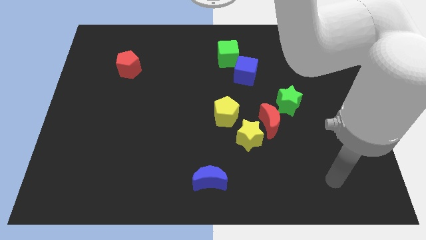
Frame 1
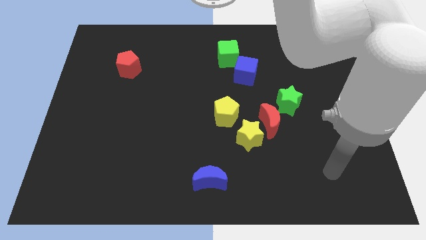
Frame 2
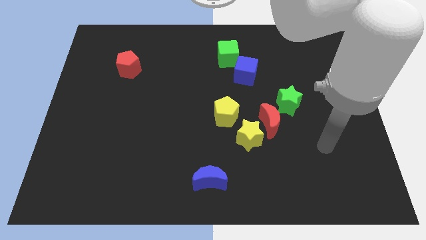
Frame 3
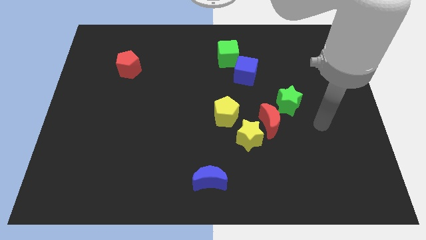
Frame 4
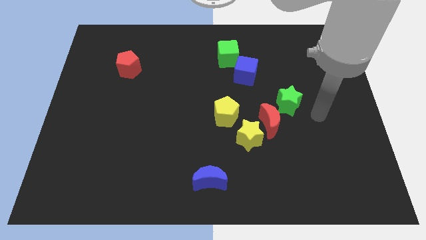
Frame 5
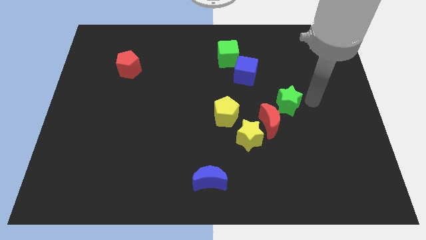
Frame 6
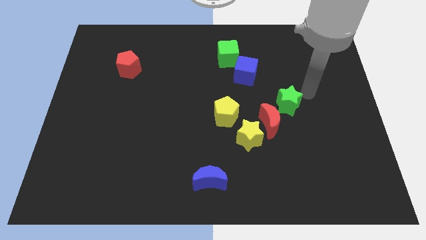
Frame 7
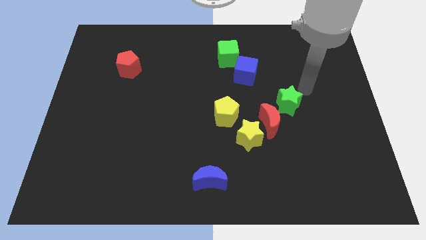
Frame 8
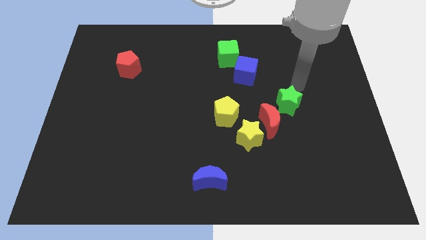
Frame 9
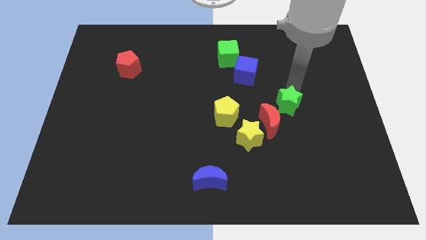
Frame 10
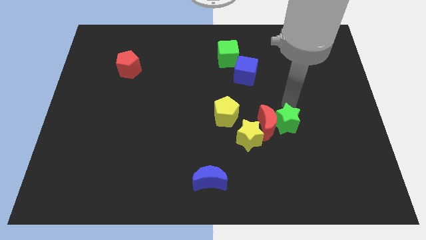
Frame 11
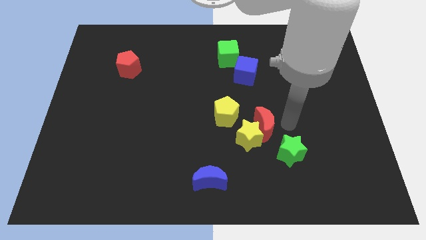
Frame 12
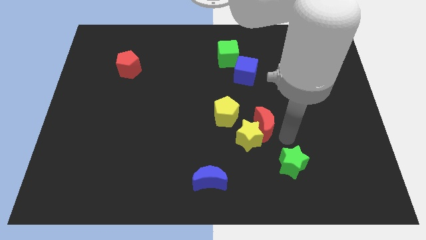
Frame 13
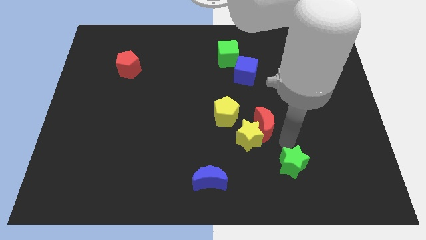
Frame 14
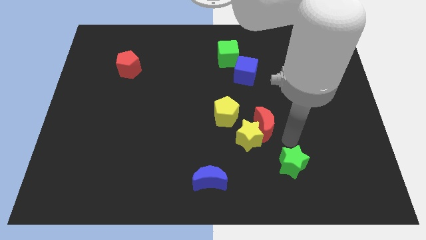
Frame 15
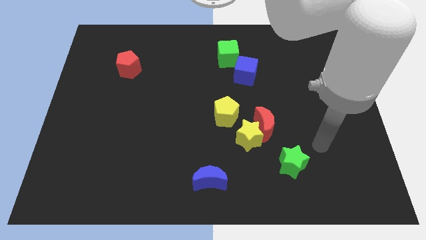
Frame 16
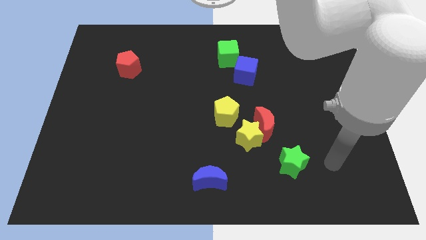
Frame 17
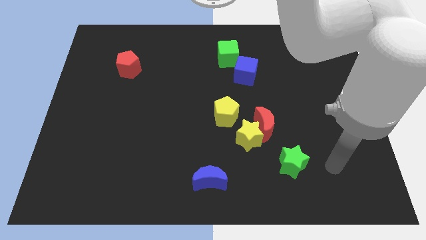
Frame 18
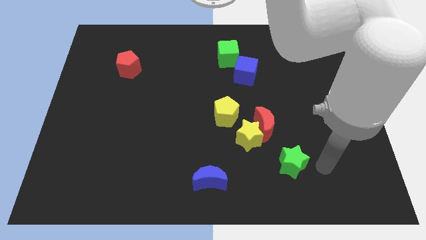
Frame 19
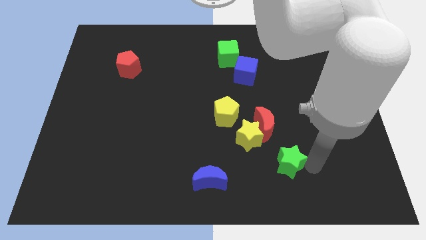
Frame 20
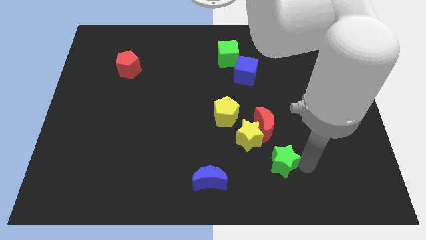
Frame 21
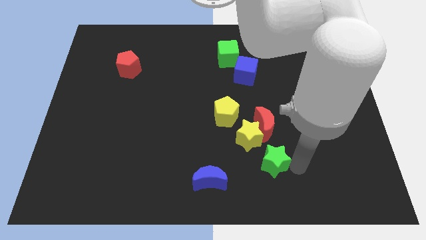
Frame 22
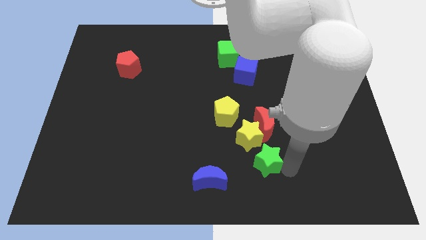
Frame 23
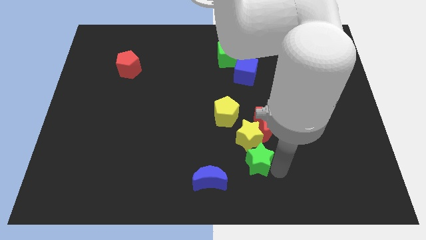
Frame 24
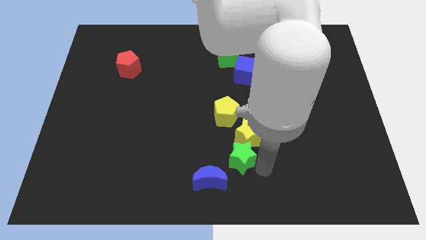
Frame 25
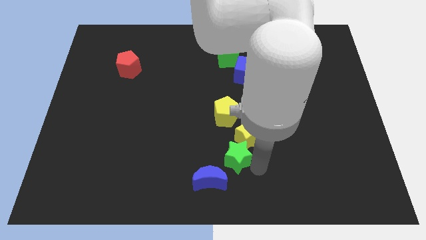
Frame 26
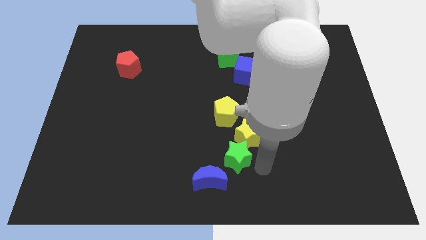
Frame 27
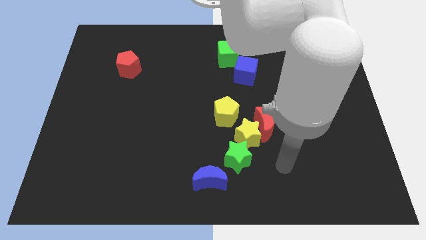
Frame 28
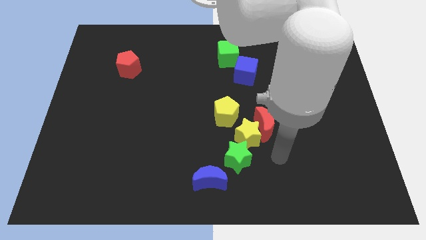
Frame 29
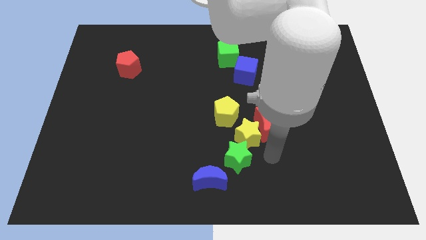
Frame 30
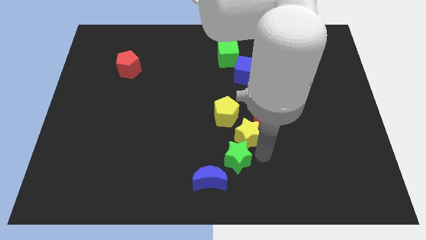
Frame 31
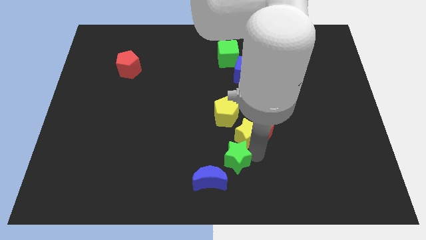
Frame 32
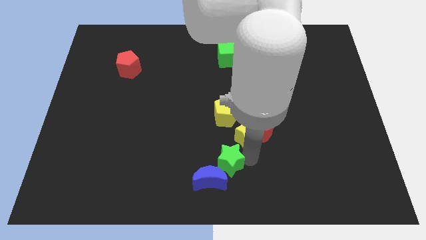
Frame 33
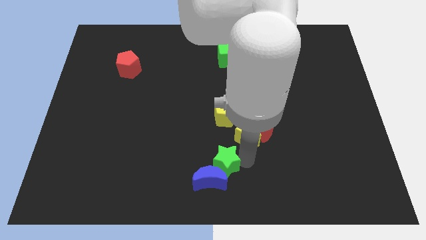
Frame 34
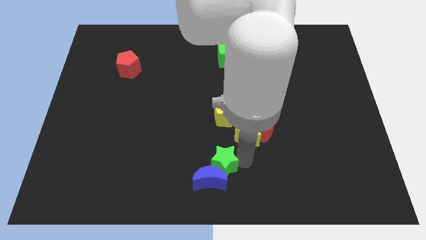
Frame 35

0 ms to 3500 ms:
put the green star close to the blue moon

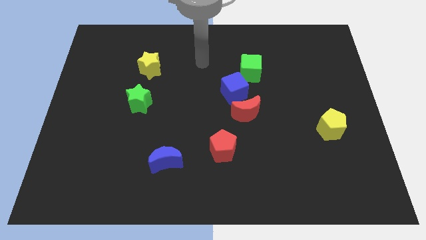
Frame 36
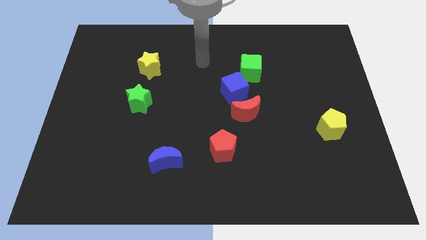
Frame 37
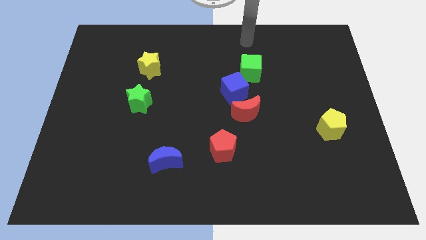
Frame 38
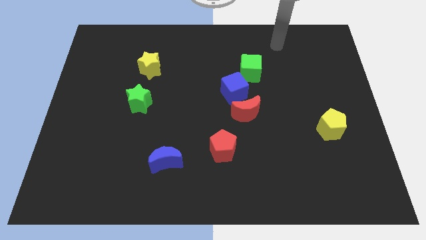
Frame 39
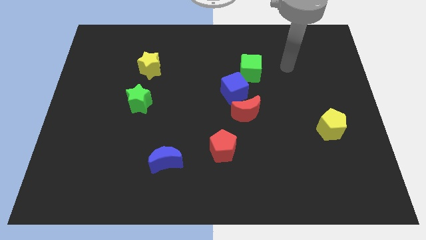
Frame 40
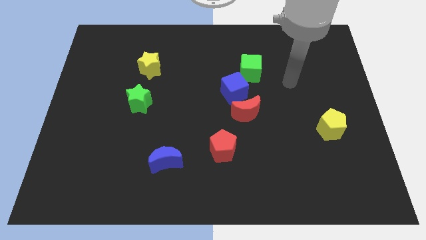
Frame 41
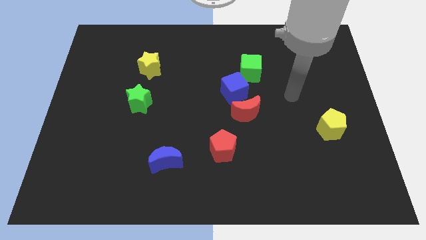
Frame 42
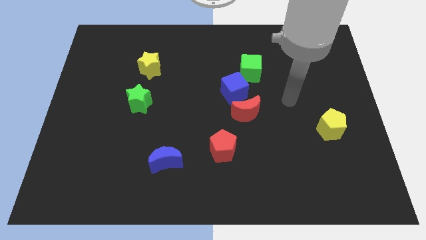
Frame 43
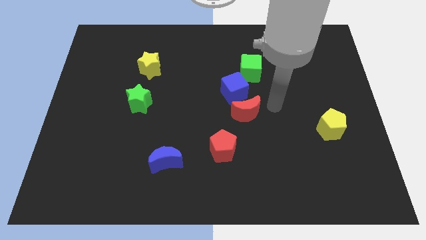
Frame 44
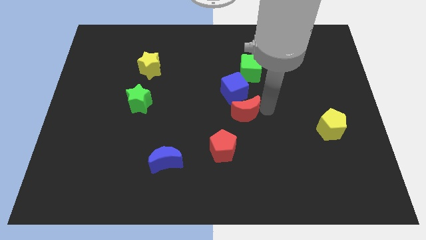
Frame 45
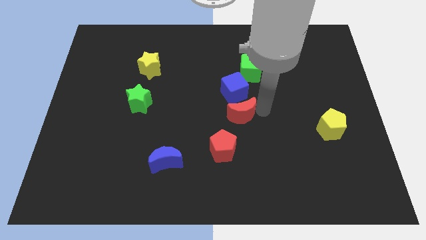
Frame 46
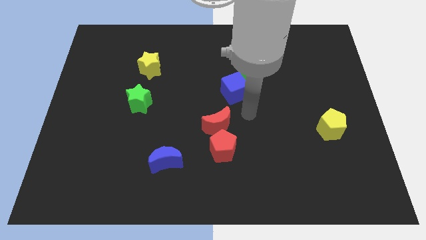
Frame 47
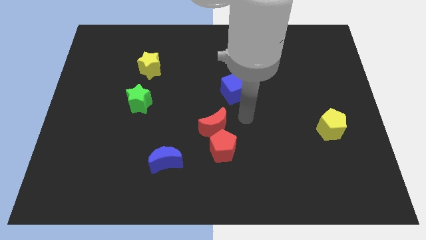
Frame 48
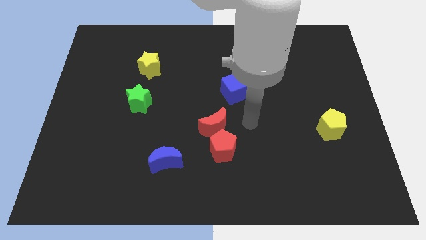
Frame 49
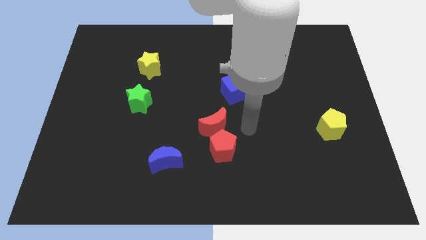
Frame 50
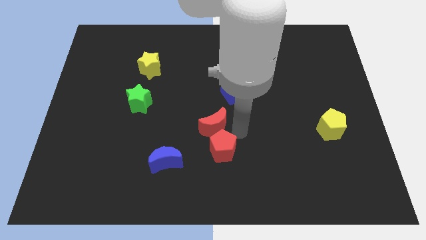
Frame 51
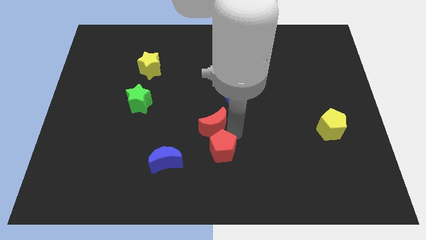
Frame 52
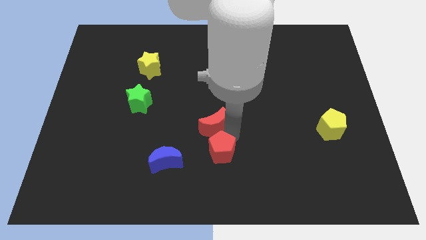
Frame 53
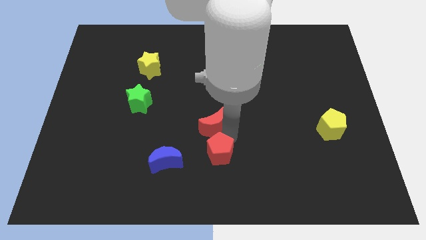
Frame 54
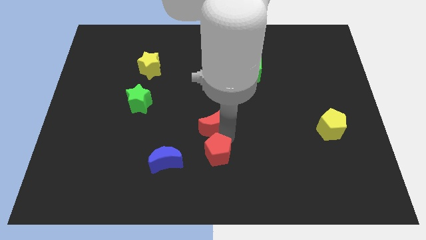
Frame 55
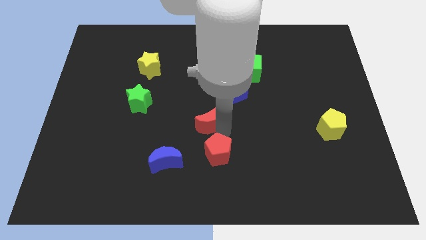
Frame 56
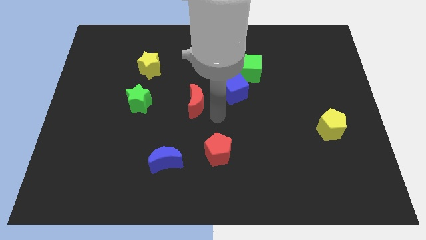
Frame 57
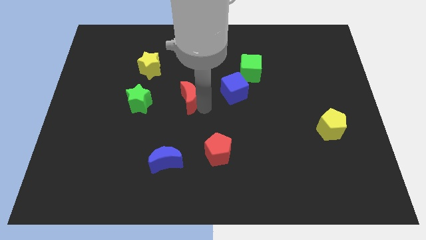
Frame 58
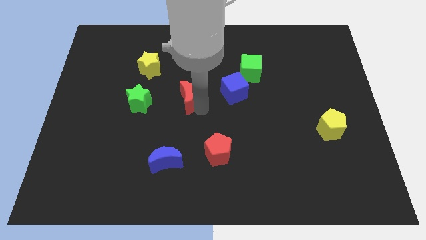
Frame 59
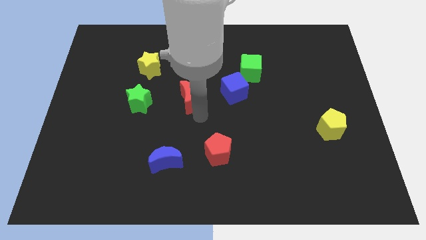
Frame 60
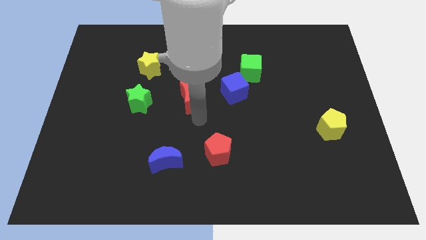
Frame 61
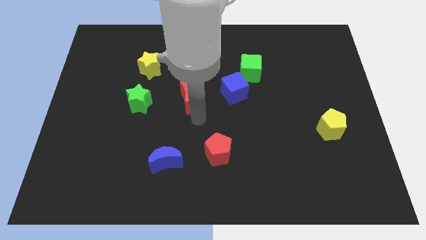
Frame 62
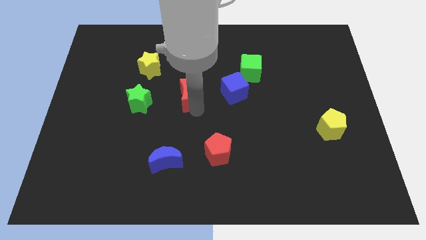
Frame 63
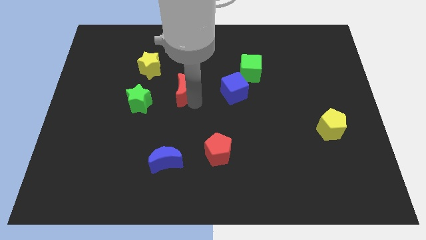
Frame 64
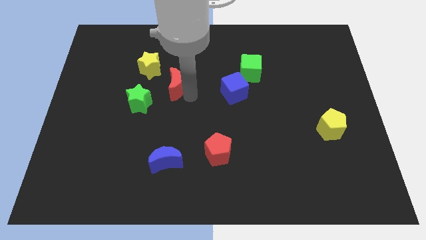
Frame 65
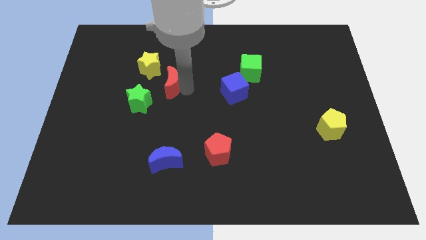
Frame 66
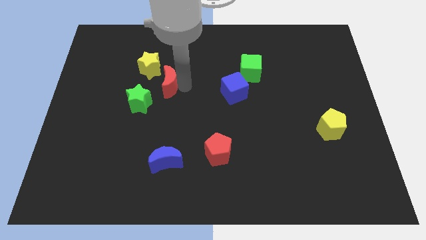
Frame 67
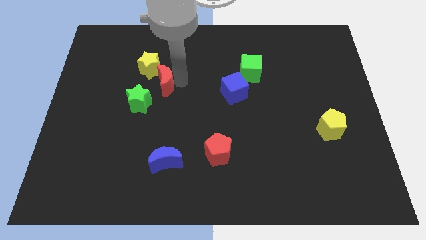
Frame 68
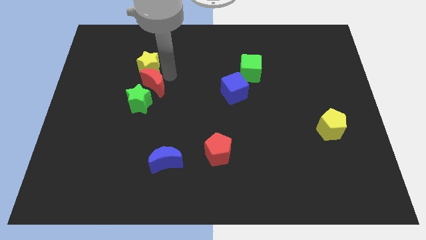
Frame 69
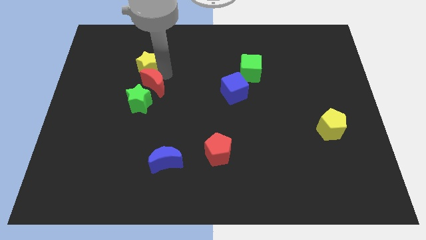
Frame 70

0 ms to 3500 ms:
move the red moon close to the yellow star

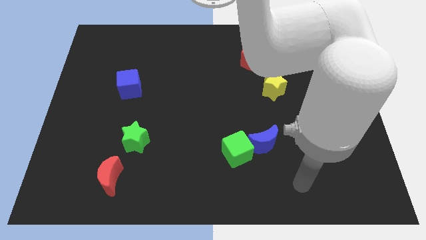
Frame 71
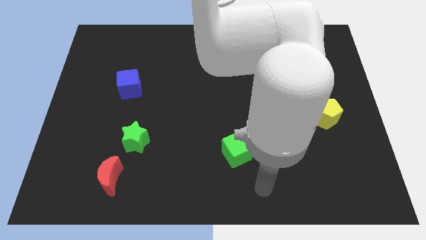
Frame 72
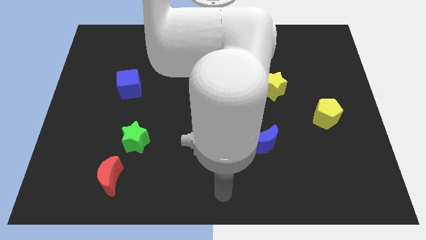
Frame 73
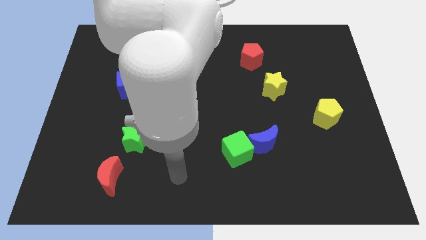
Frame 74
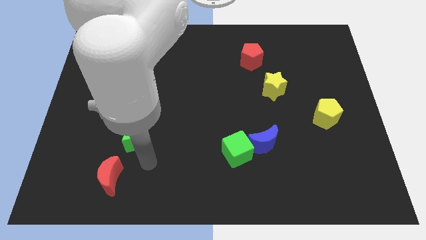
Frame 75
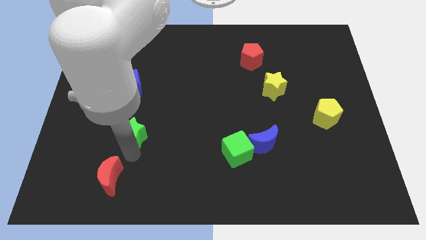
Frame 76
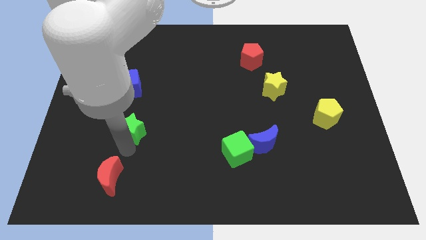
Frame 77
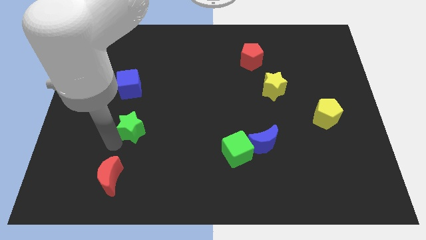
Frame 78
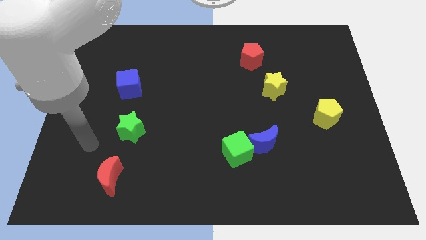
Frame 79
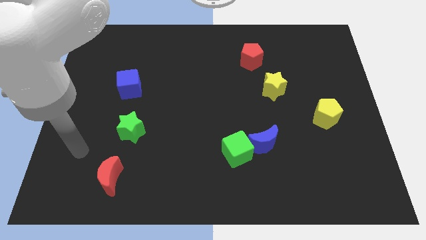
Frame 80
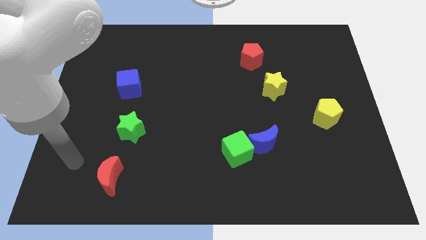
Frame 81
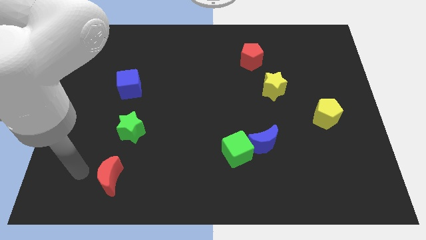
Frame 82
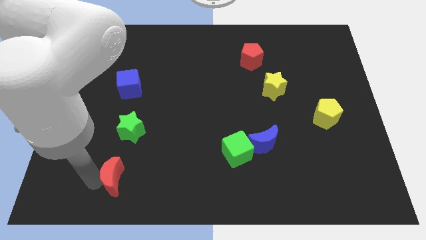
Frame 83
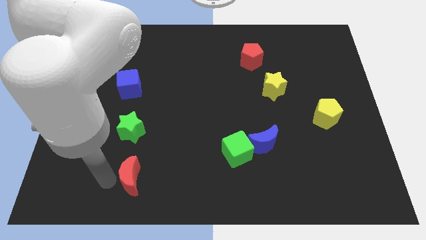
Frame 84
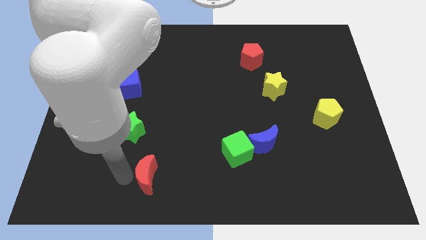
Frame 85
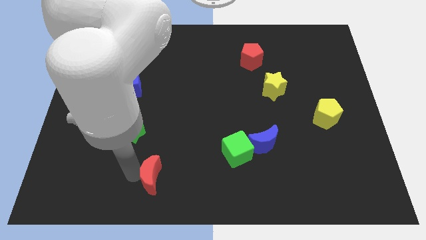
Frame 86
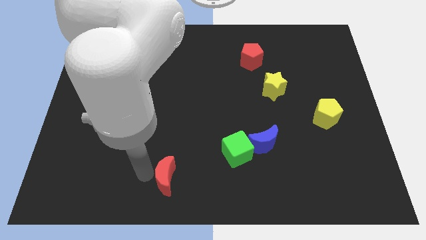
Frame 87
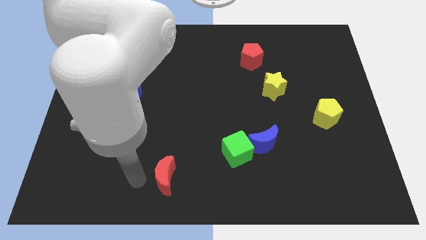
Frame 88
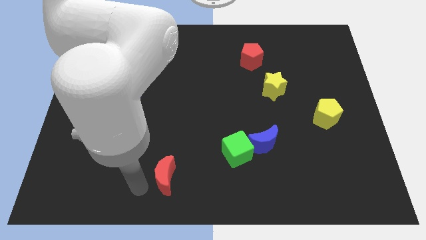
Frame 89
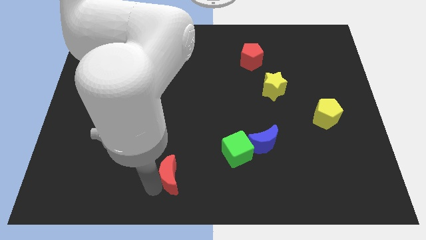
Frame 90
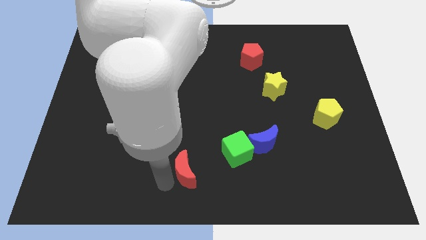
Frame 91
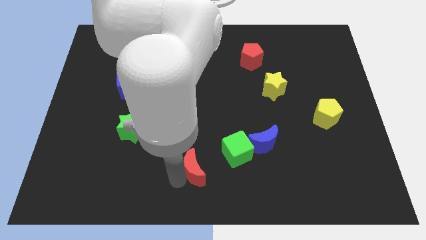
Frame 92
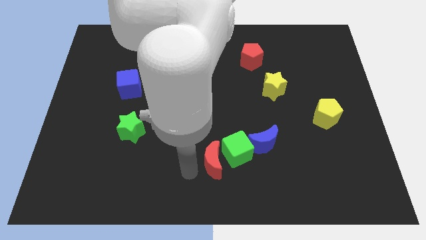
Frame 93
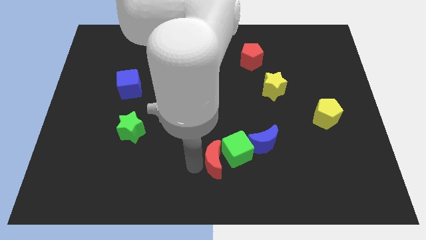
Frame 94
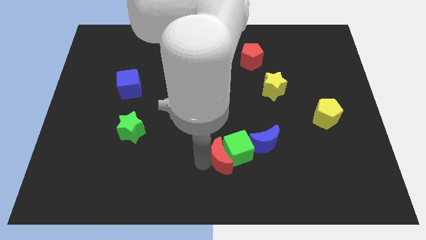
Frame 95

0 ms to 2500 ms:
push the red moon to the green cube
